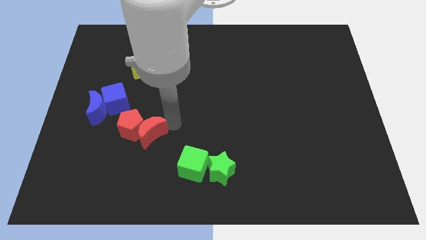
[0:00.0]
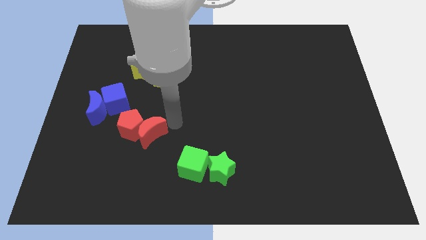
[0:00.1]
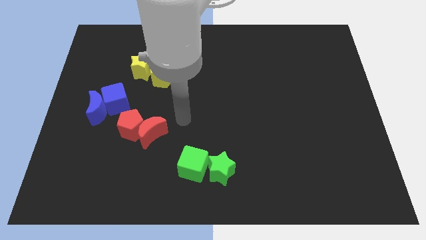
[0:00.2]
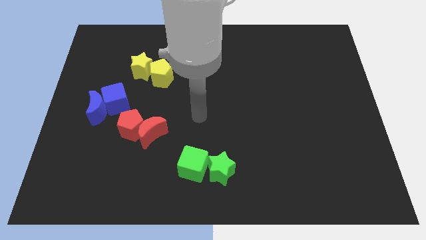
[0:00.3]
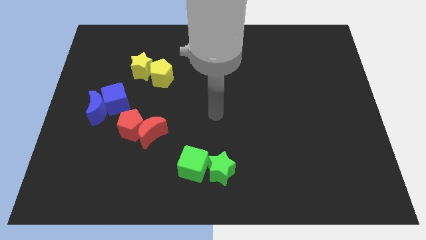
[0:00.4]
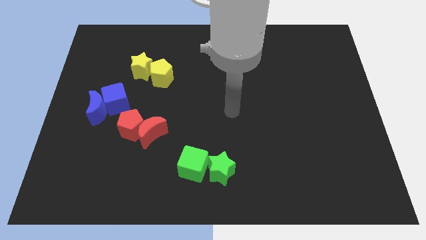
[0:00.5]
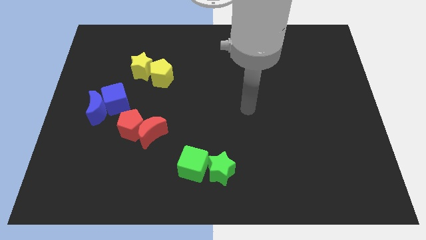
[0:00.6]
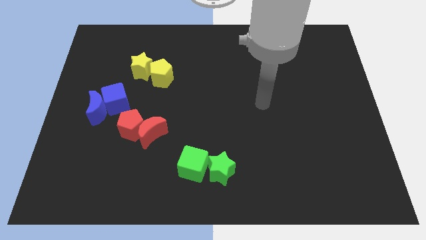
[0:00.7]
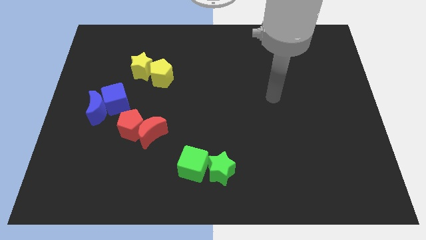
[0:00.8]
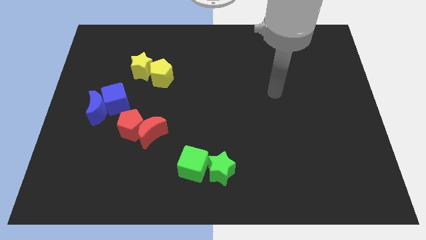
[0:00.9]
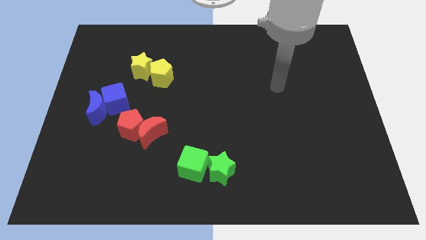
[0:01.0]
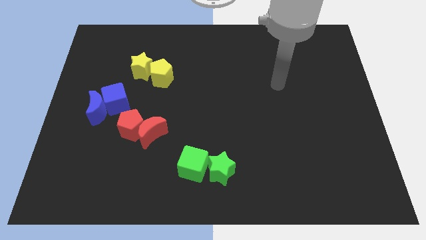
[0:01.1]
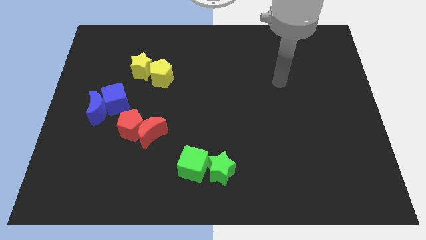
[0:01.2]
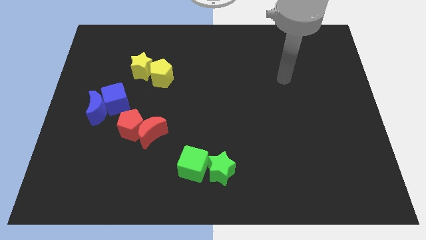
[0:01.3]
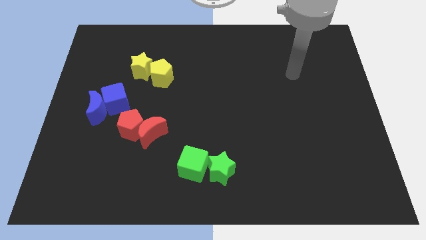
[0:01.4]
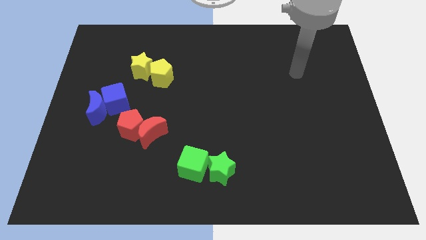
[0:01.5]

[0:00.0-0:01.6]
drag your hand away from the red moon

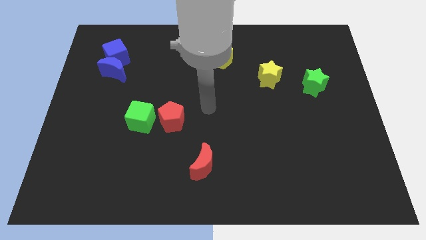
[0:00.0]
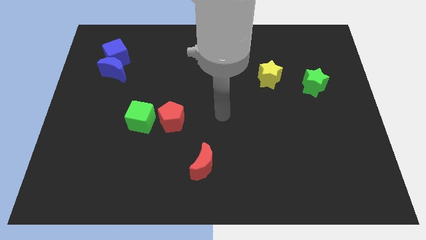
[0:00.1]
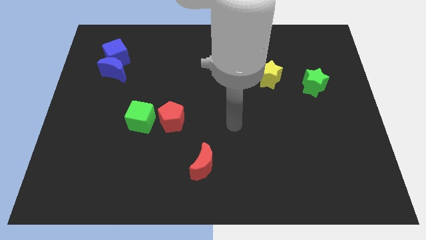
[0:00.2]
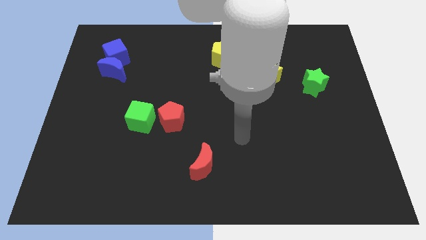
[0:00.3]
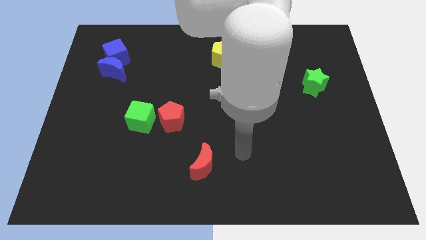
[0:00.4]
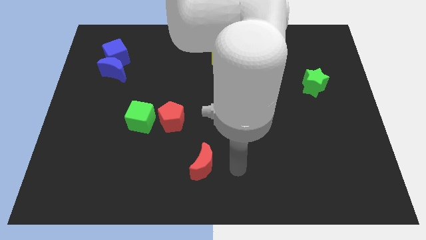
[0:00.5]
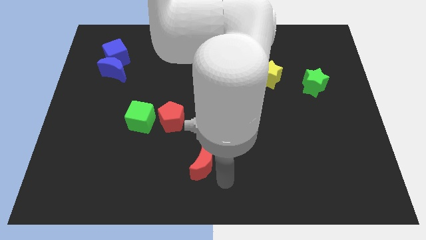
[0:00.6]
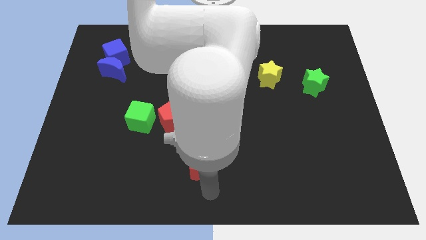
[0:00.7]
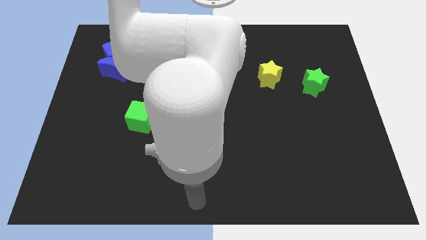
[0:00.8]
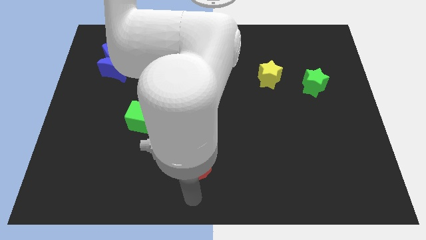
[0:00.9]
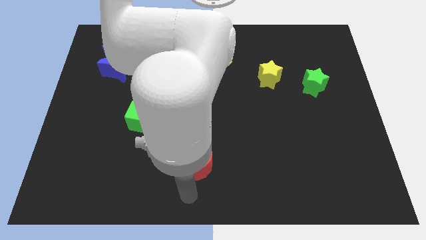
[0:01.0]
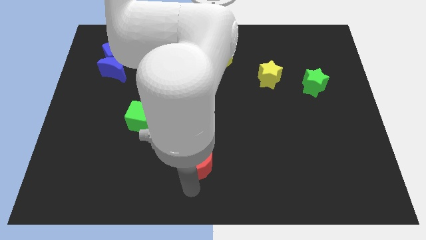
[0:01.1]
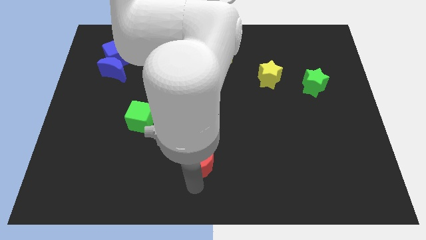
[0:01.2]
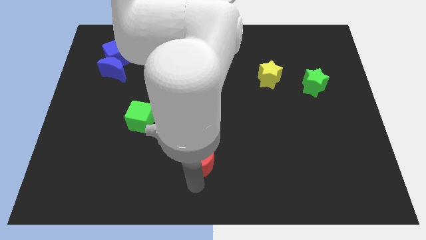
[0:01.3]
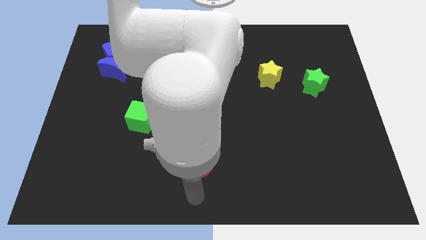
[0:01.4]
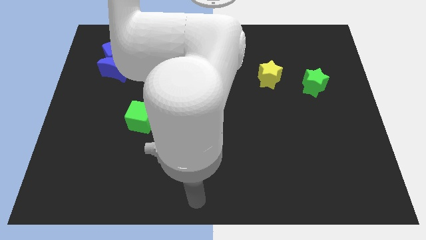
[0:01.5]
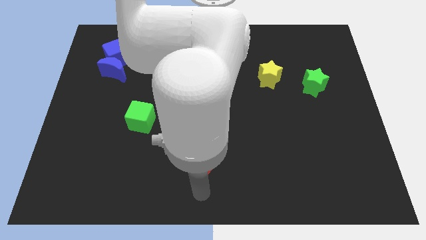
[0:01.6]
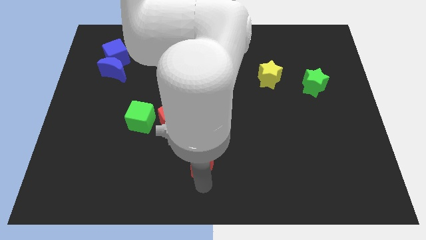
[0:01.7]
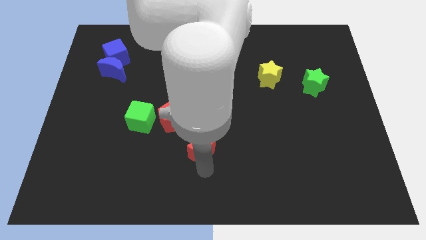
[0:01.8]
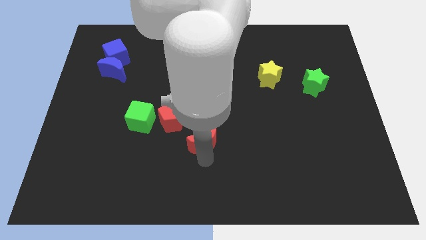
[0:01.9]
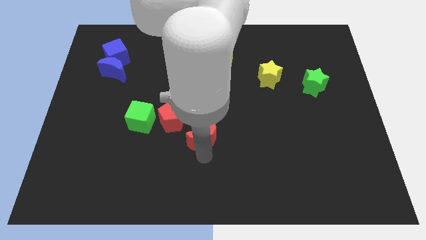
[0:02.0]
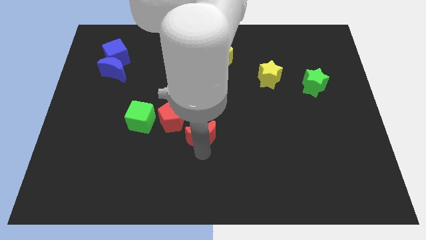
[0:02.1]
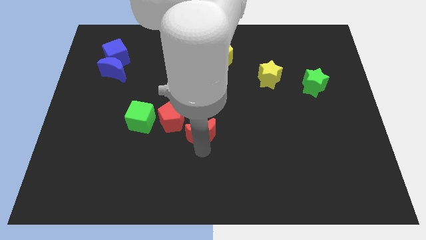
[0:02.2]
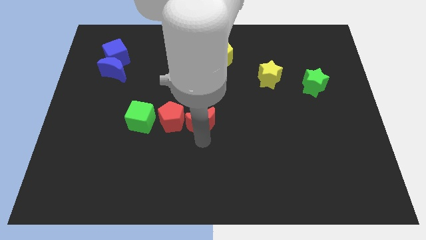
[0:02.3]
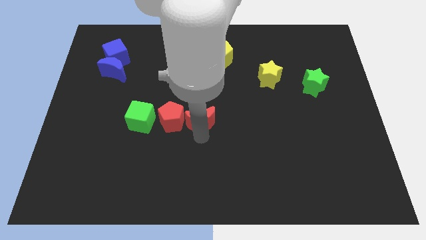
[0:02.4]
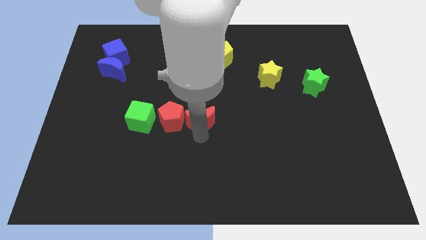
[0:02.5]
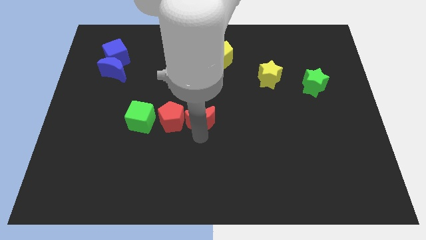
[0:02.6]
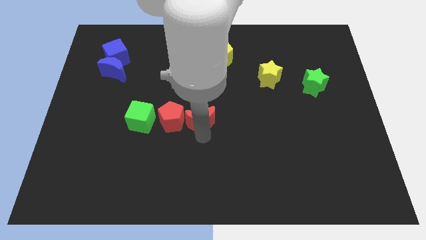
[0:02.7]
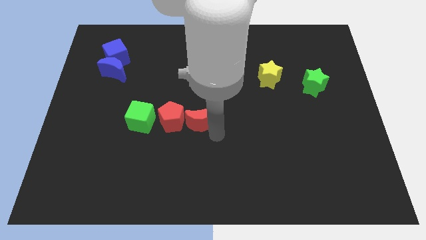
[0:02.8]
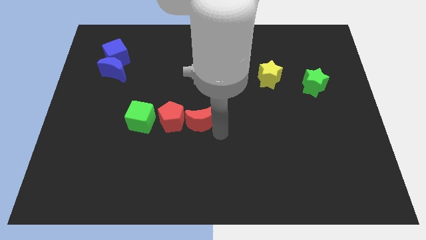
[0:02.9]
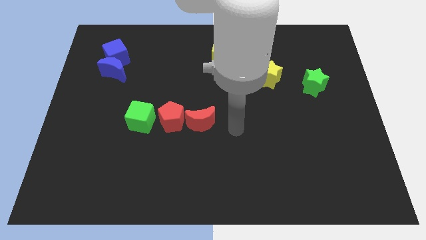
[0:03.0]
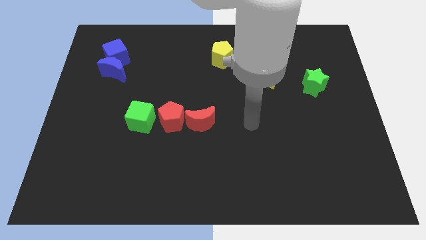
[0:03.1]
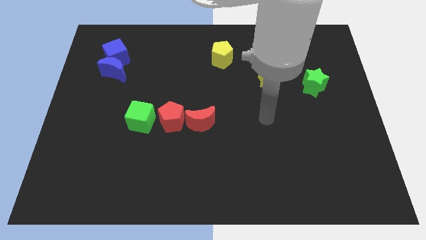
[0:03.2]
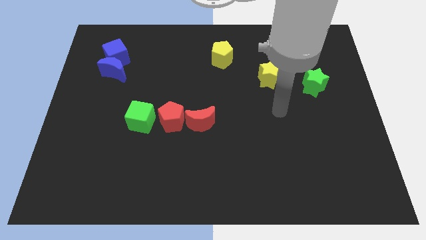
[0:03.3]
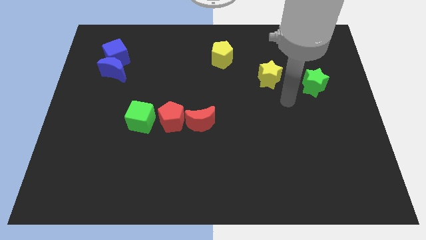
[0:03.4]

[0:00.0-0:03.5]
place the red moon to the right side of the red pentagon

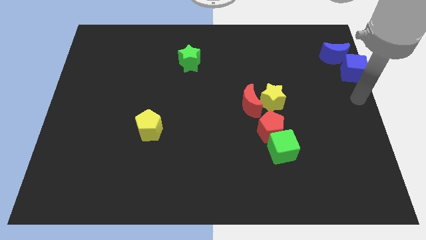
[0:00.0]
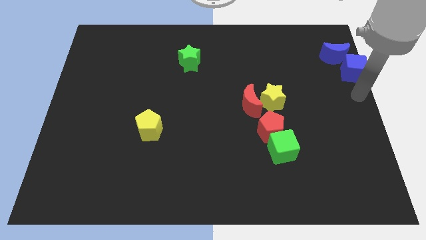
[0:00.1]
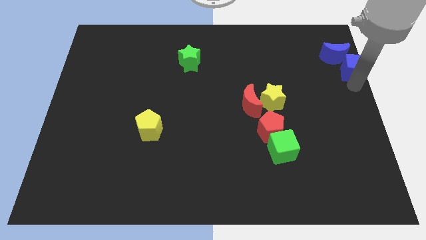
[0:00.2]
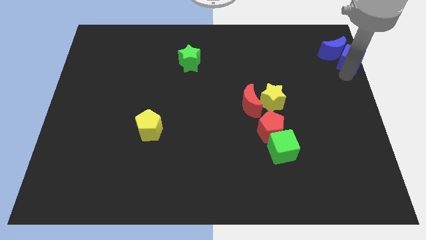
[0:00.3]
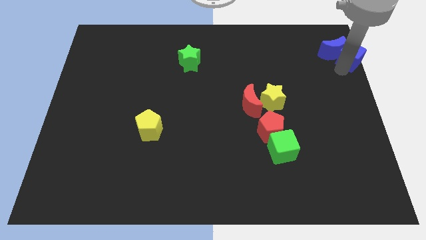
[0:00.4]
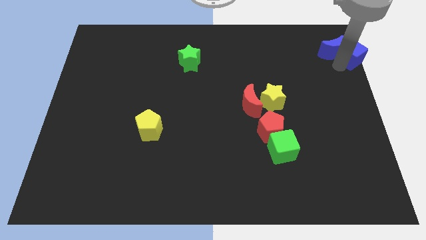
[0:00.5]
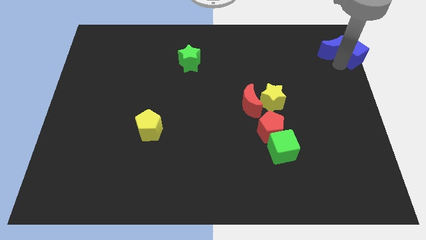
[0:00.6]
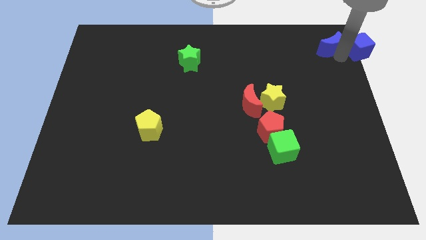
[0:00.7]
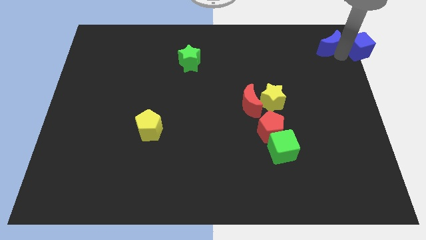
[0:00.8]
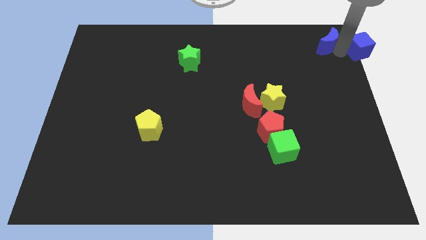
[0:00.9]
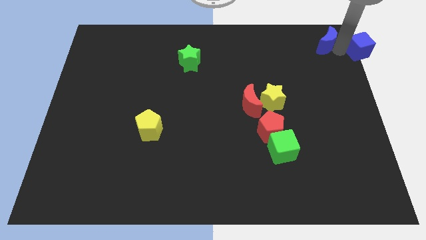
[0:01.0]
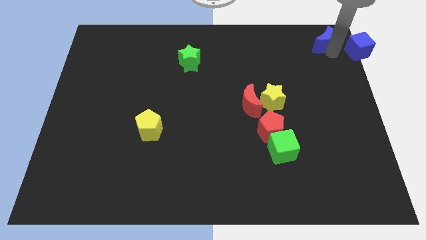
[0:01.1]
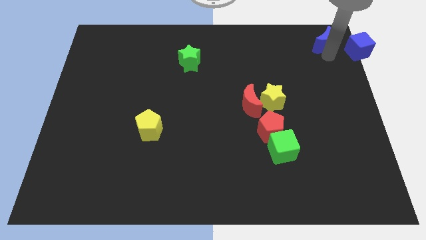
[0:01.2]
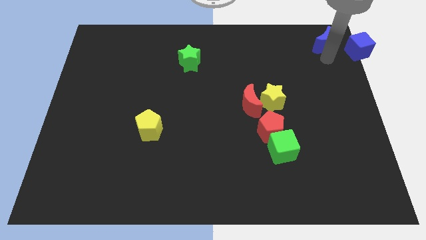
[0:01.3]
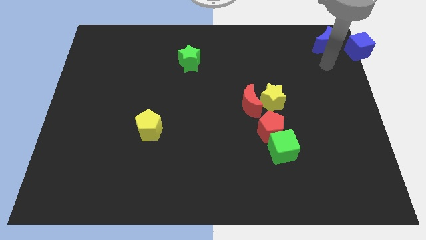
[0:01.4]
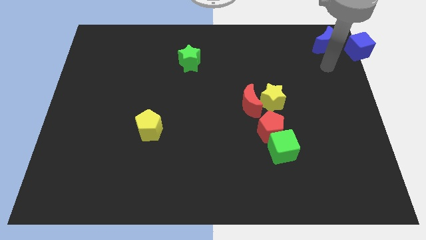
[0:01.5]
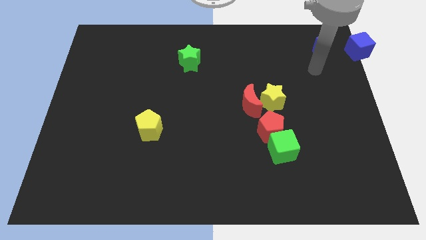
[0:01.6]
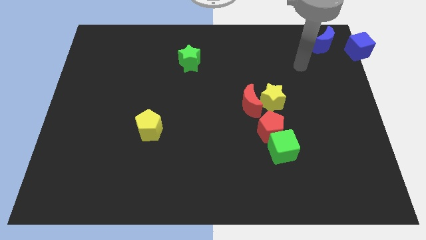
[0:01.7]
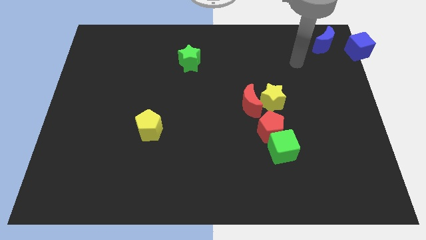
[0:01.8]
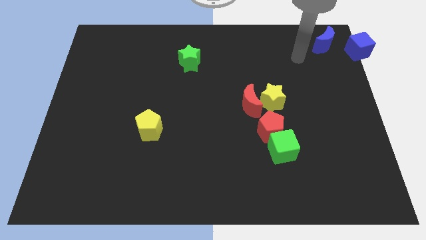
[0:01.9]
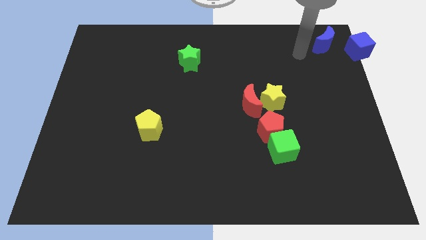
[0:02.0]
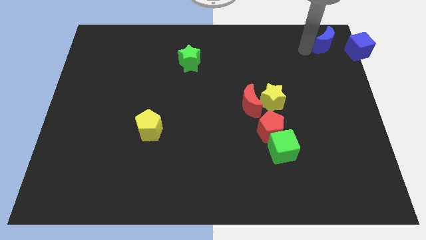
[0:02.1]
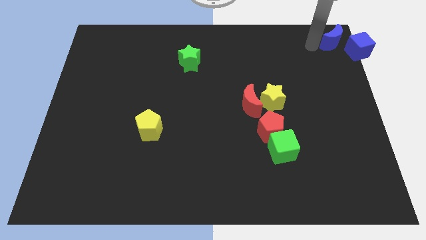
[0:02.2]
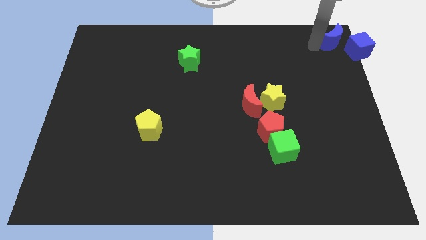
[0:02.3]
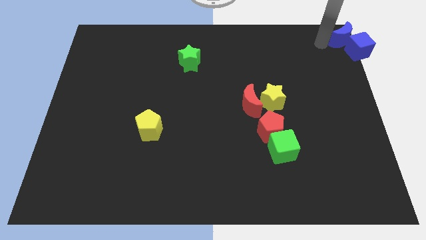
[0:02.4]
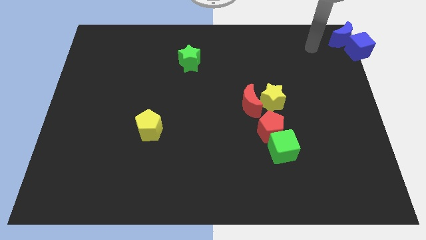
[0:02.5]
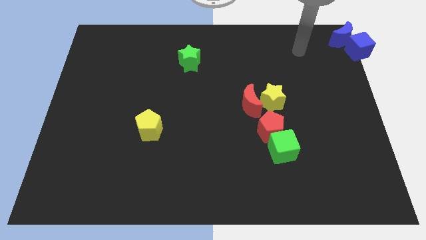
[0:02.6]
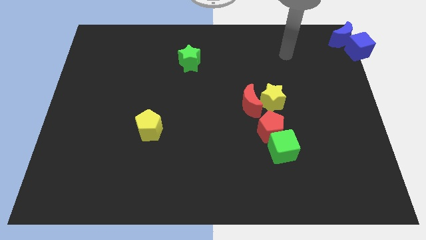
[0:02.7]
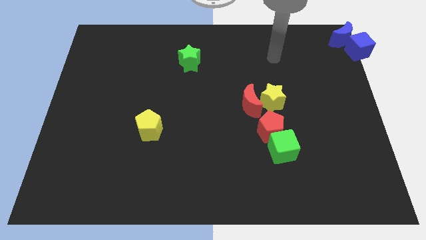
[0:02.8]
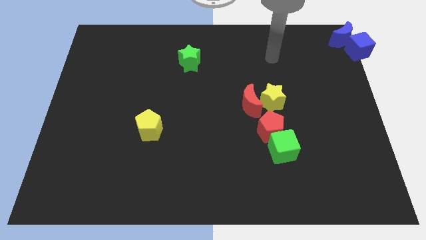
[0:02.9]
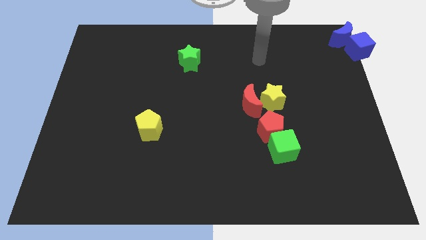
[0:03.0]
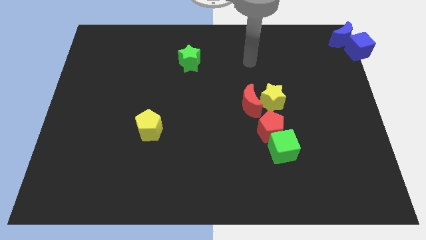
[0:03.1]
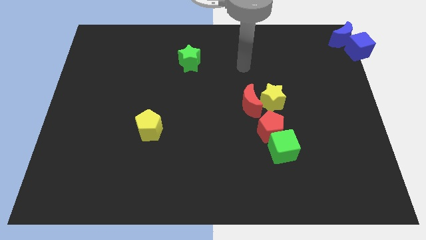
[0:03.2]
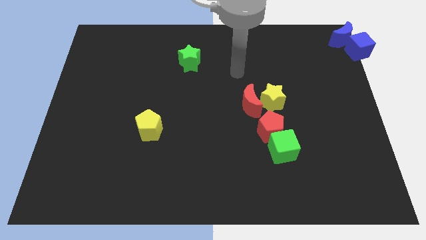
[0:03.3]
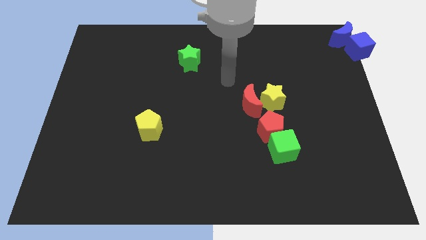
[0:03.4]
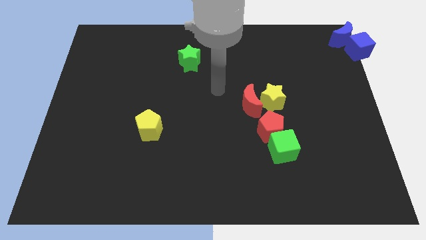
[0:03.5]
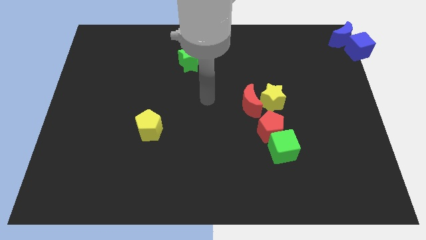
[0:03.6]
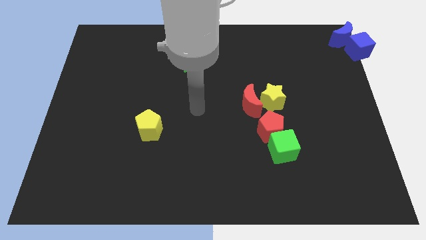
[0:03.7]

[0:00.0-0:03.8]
push the blue crescent along with blue cube to the top right corner of the board

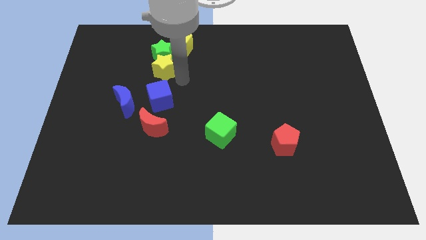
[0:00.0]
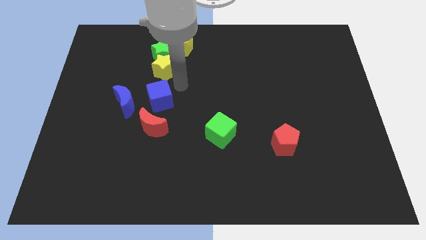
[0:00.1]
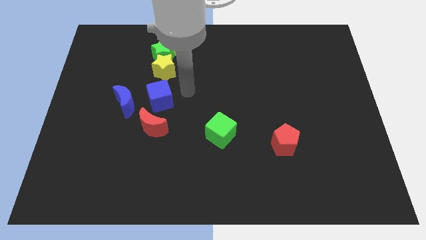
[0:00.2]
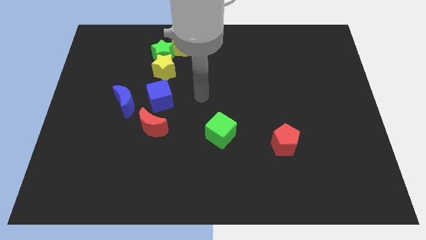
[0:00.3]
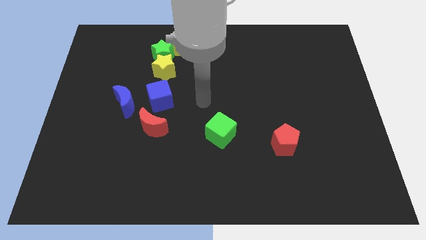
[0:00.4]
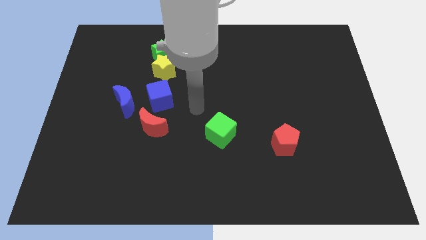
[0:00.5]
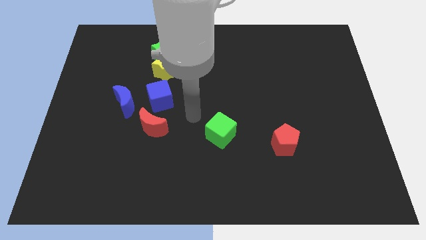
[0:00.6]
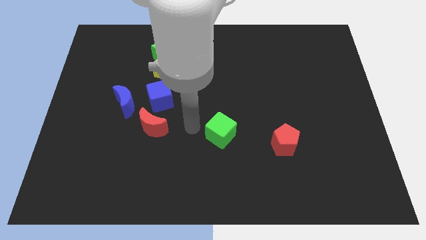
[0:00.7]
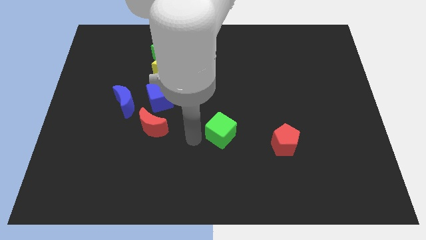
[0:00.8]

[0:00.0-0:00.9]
point the arm in between the green cube and the red crescent
